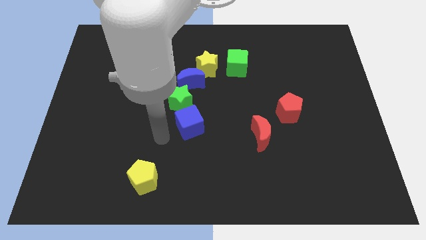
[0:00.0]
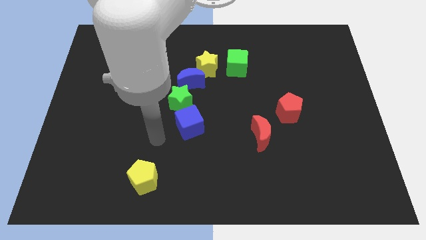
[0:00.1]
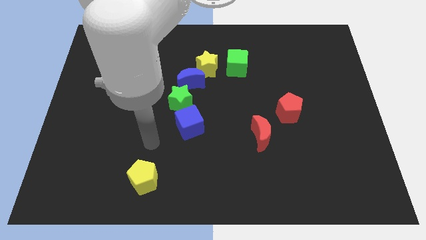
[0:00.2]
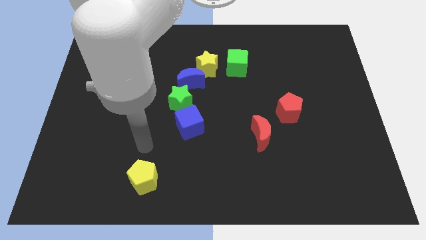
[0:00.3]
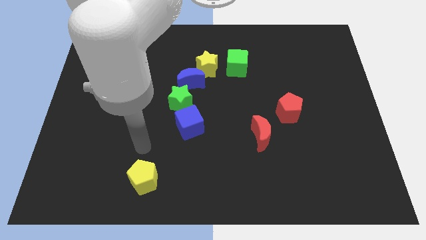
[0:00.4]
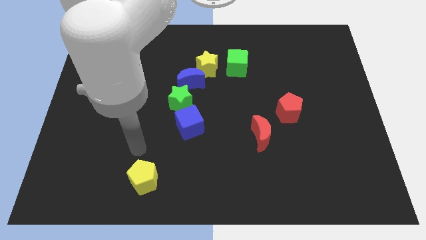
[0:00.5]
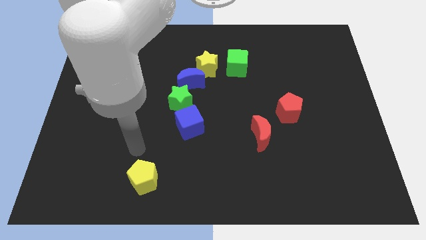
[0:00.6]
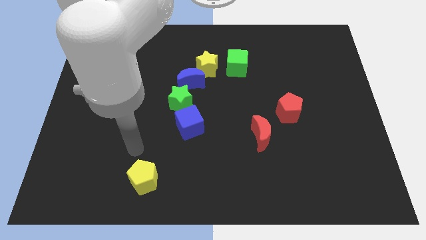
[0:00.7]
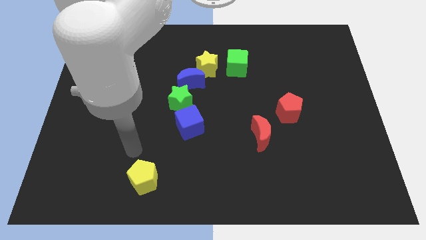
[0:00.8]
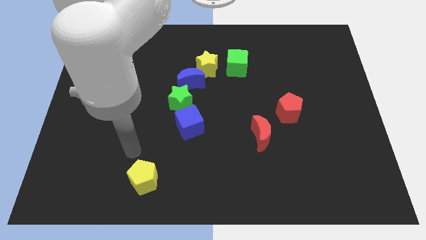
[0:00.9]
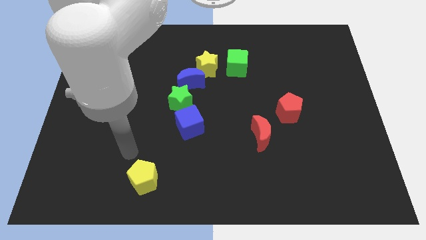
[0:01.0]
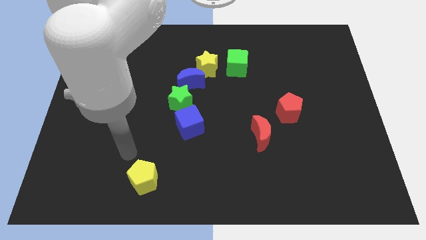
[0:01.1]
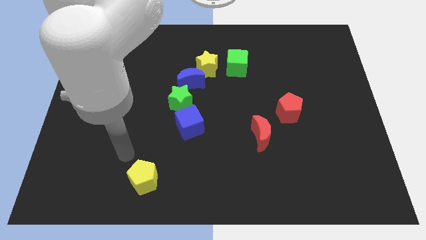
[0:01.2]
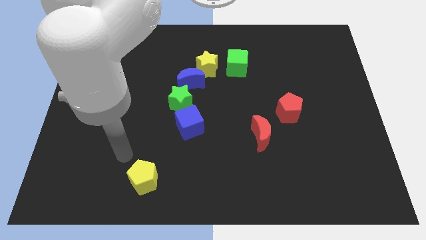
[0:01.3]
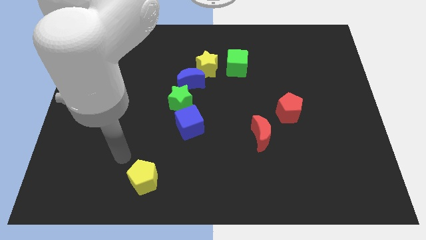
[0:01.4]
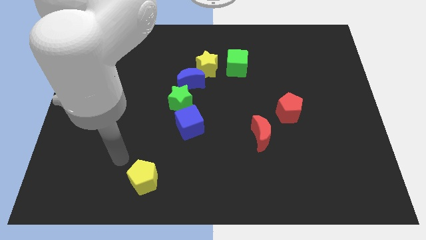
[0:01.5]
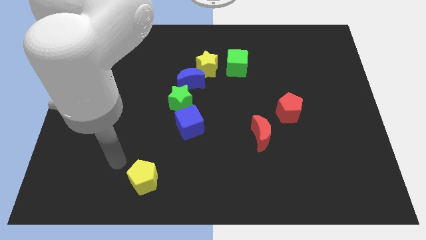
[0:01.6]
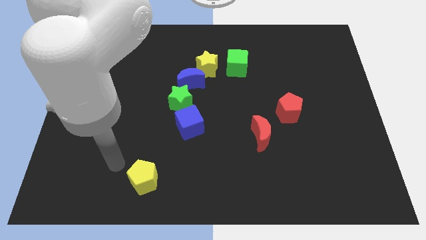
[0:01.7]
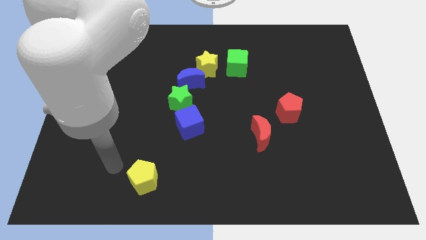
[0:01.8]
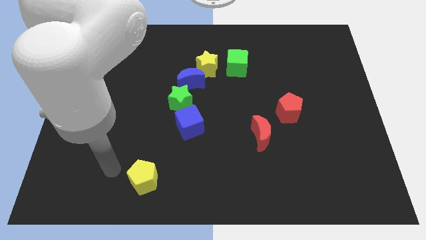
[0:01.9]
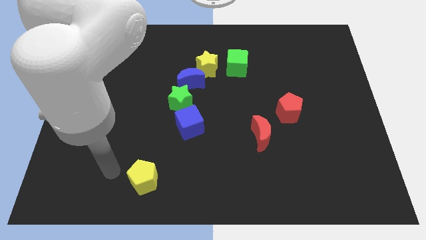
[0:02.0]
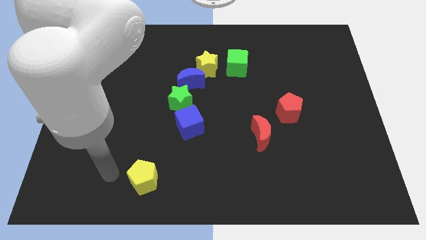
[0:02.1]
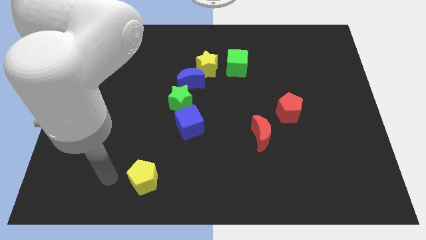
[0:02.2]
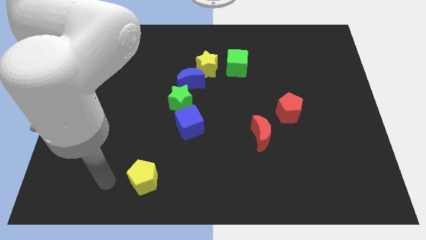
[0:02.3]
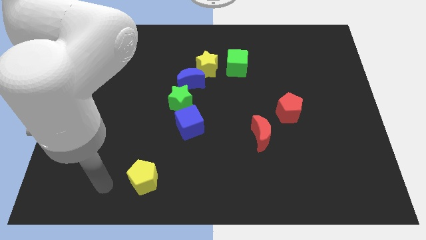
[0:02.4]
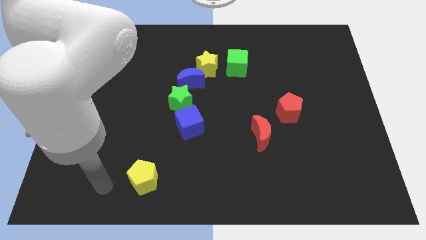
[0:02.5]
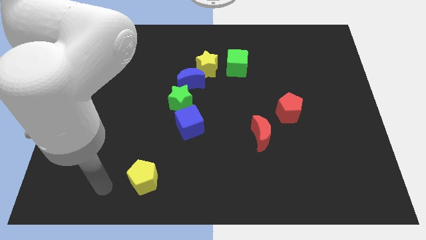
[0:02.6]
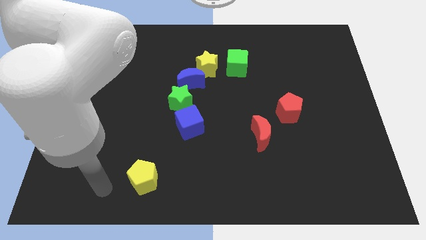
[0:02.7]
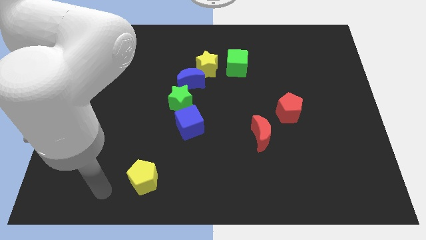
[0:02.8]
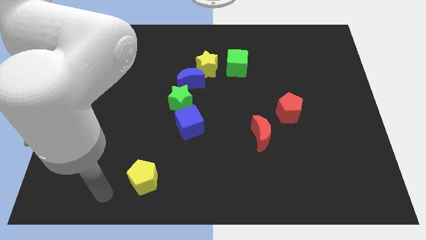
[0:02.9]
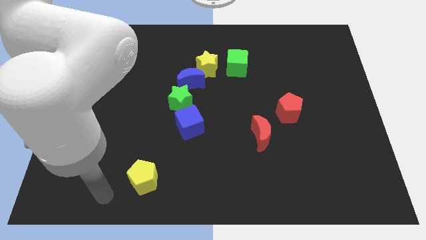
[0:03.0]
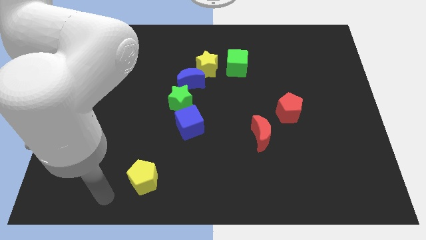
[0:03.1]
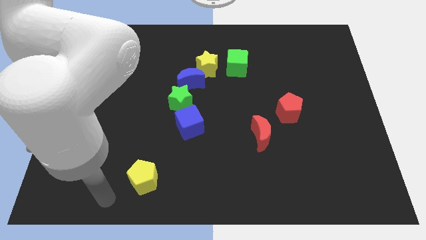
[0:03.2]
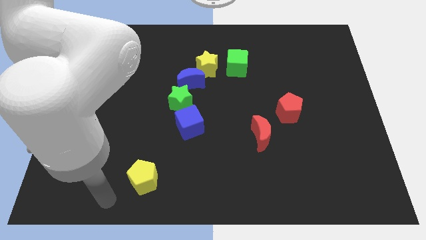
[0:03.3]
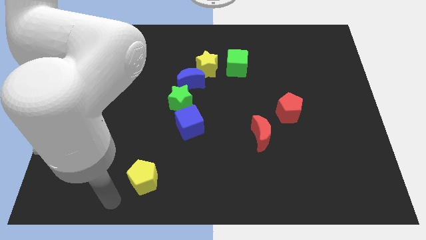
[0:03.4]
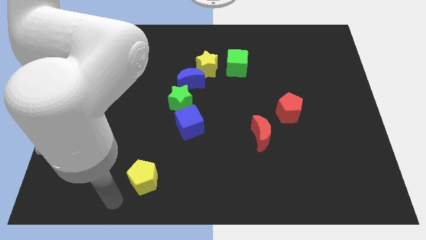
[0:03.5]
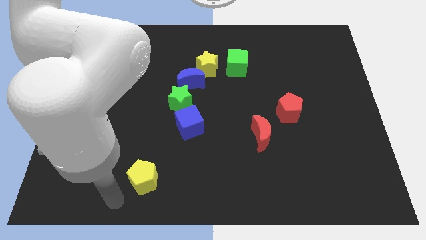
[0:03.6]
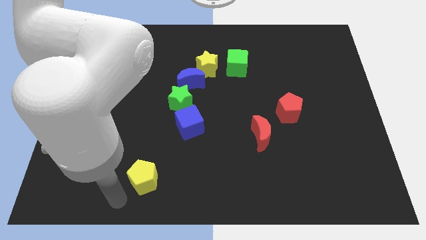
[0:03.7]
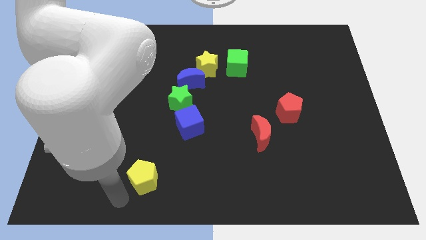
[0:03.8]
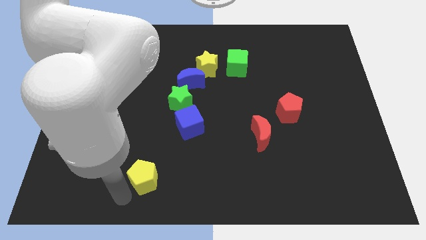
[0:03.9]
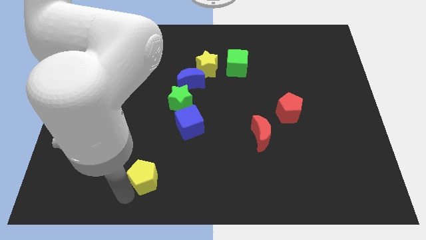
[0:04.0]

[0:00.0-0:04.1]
point your arm at the bottom left of the yellow pentagon

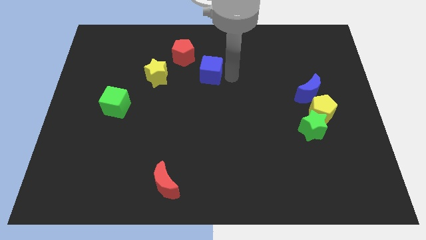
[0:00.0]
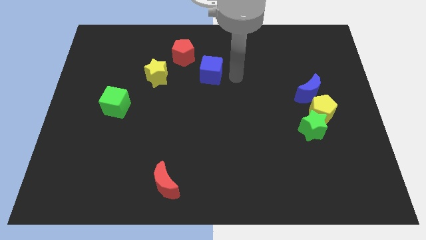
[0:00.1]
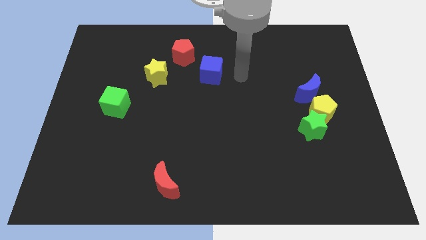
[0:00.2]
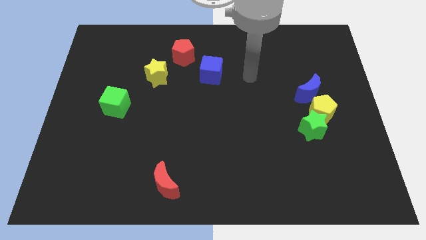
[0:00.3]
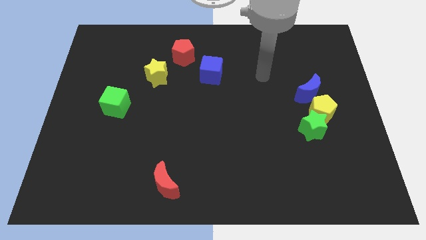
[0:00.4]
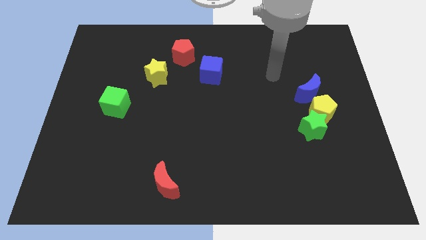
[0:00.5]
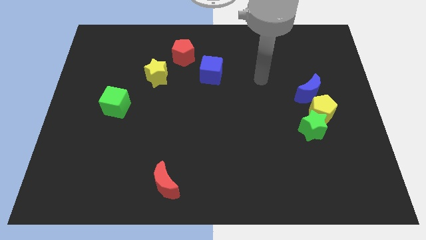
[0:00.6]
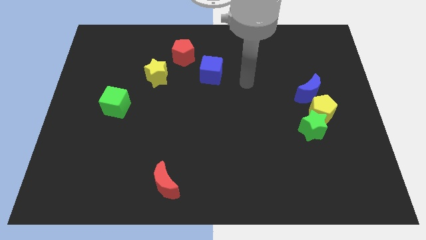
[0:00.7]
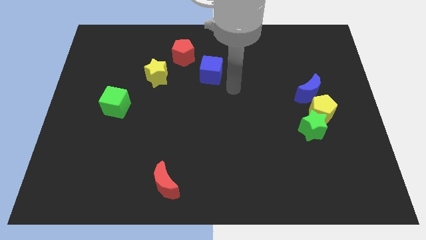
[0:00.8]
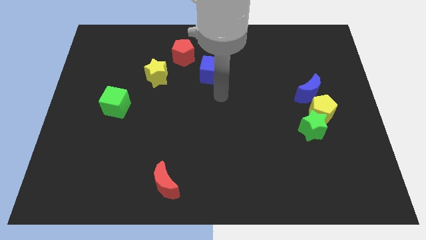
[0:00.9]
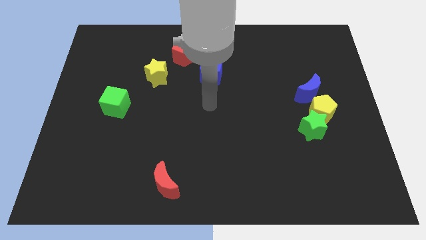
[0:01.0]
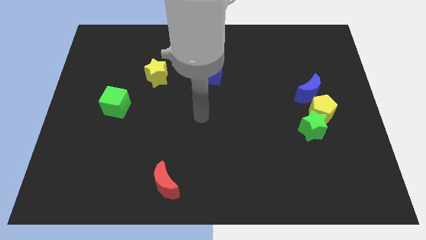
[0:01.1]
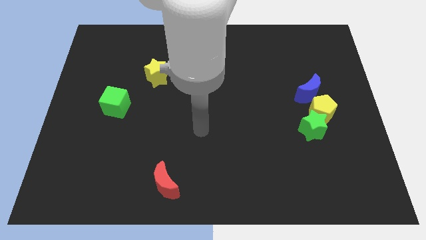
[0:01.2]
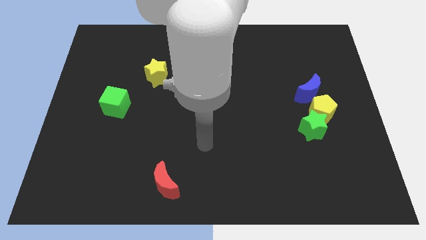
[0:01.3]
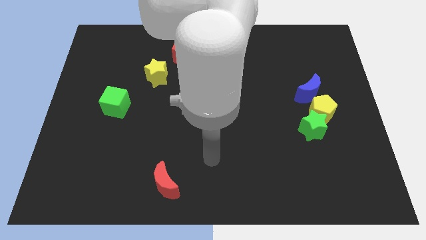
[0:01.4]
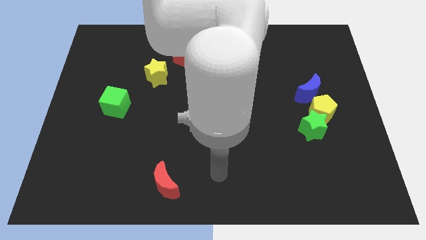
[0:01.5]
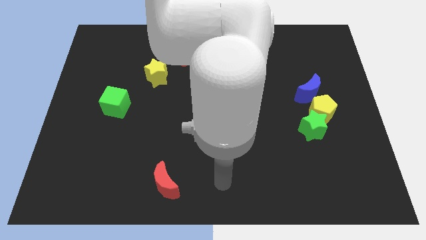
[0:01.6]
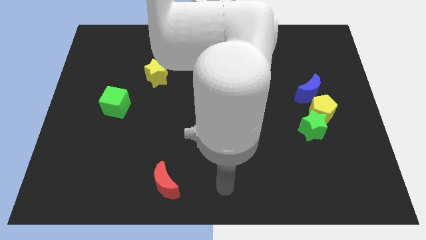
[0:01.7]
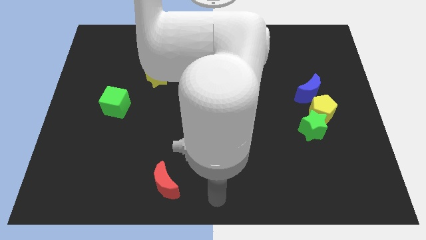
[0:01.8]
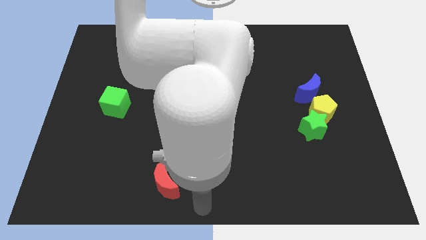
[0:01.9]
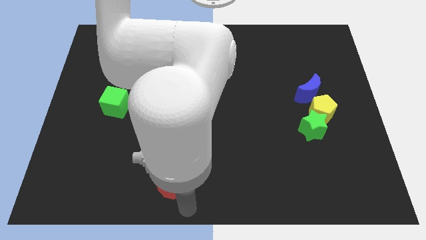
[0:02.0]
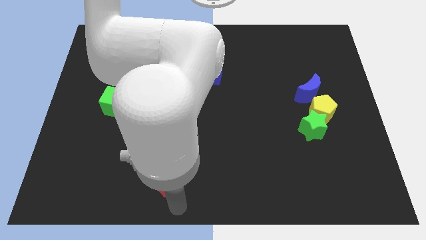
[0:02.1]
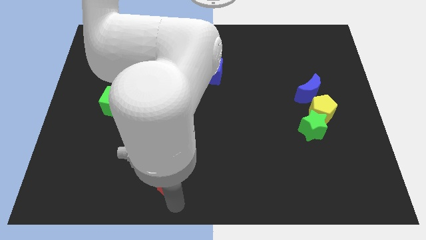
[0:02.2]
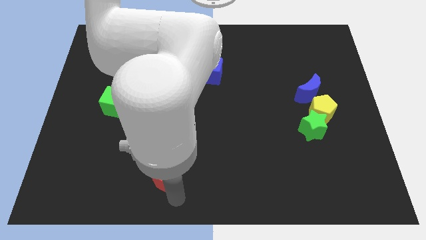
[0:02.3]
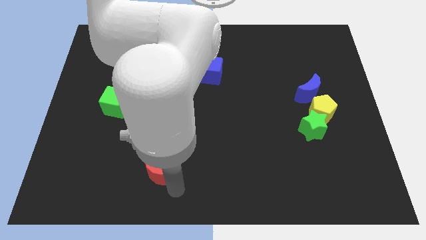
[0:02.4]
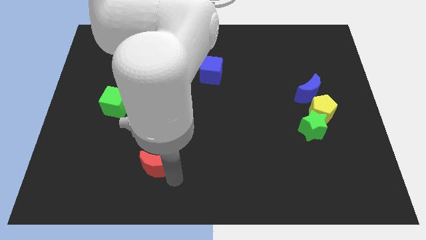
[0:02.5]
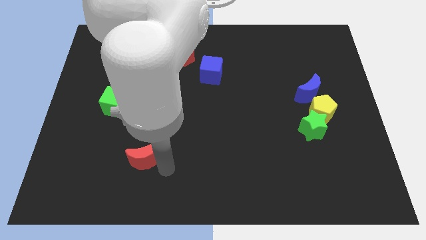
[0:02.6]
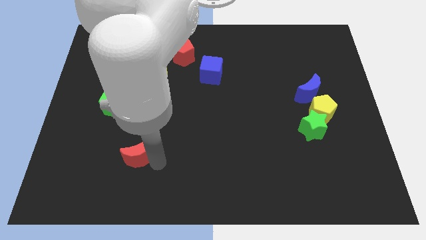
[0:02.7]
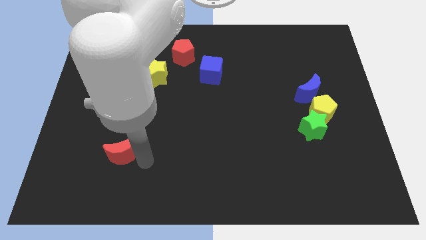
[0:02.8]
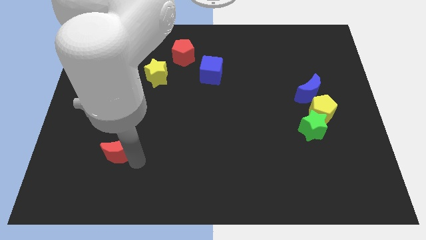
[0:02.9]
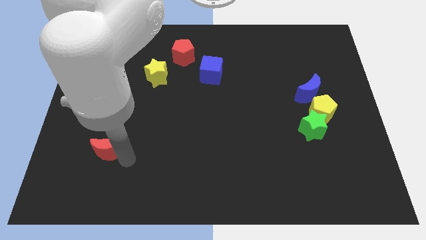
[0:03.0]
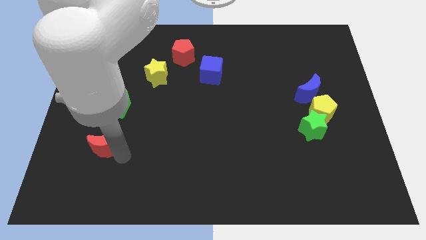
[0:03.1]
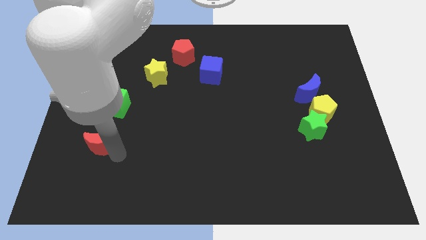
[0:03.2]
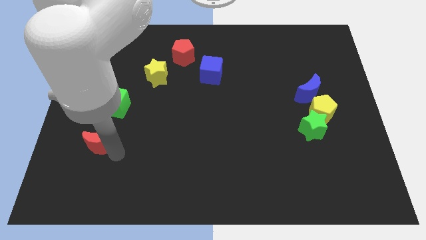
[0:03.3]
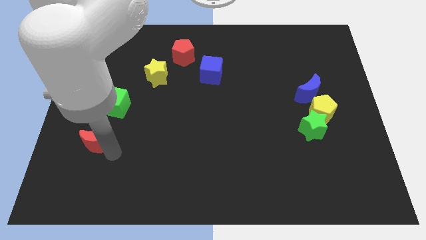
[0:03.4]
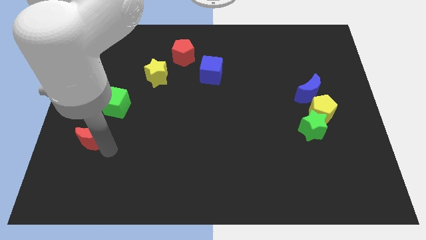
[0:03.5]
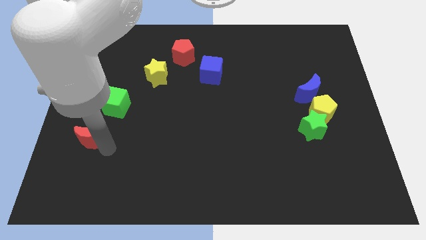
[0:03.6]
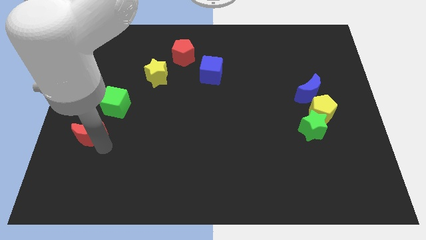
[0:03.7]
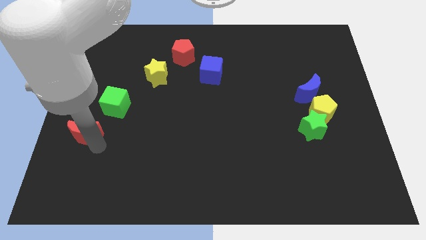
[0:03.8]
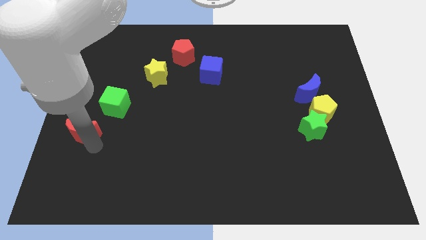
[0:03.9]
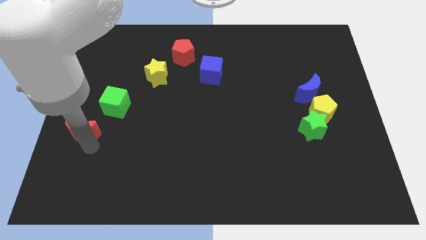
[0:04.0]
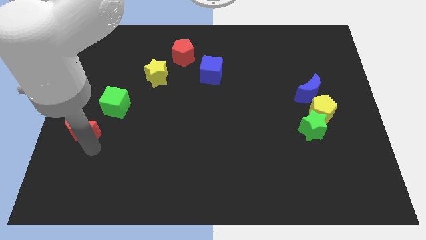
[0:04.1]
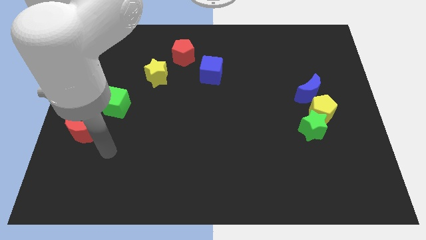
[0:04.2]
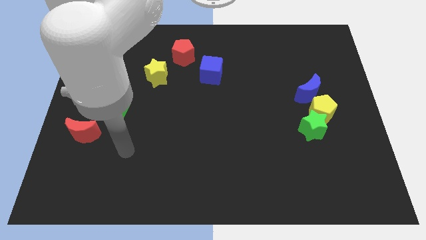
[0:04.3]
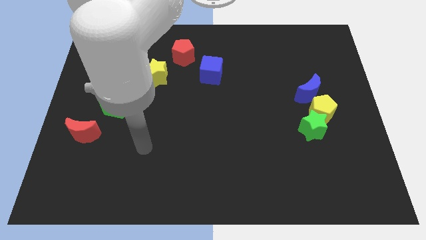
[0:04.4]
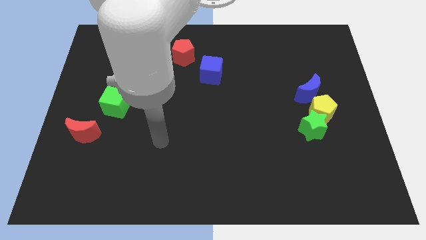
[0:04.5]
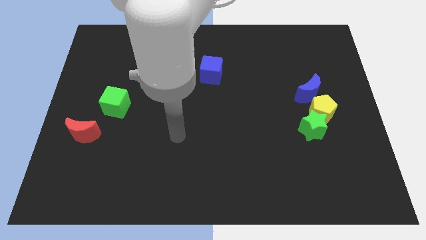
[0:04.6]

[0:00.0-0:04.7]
push the red moon to the left side of the board
